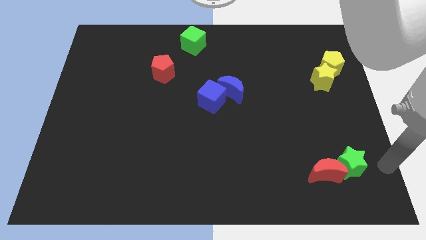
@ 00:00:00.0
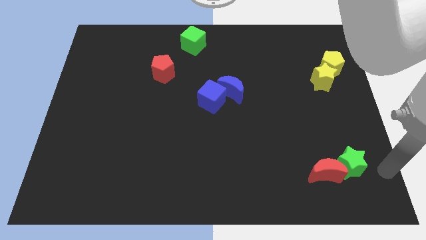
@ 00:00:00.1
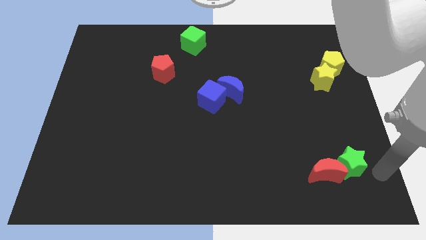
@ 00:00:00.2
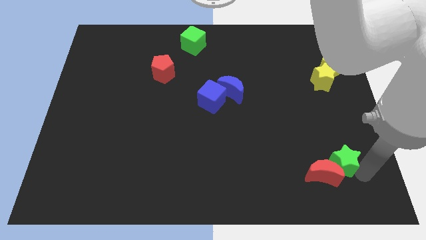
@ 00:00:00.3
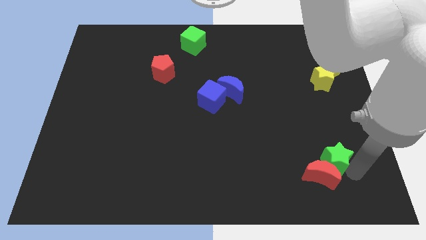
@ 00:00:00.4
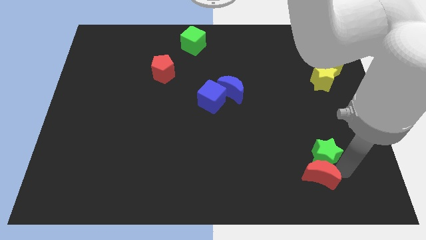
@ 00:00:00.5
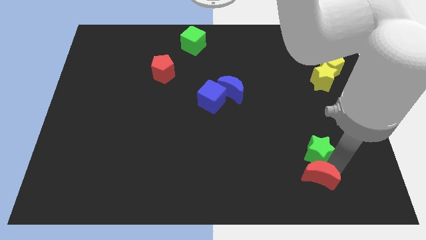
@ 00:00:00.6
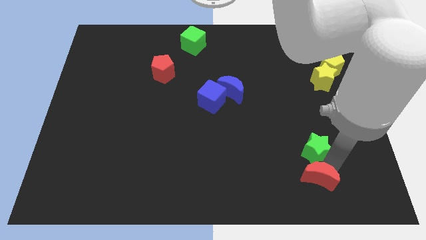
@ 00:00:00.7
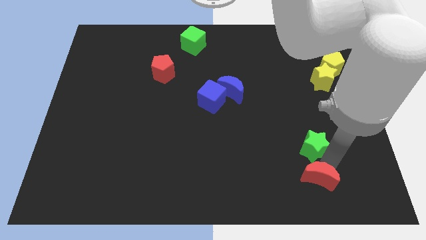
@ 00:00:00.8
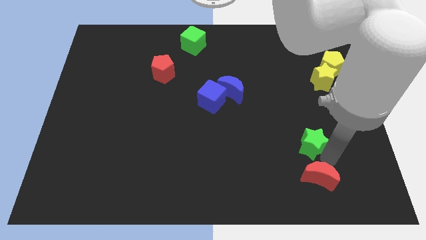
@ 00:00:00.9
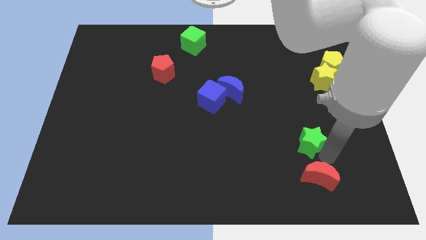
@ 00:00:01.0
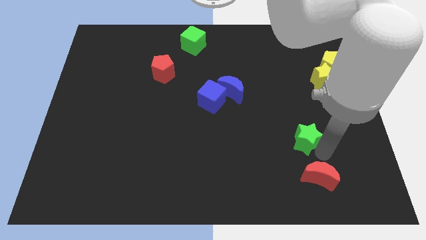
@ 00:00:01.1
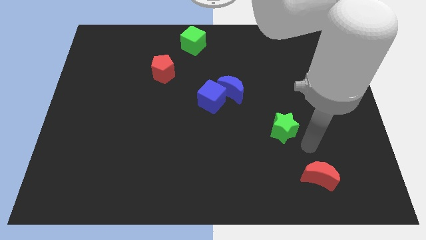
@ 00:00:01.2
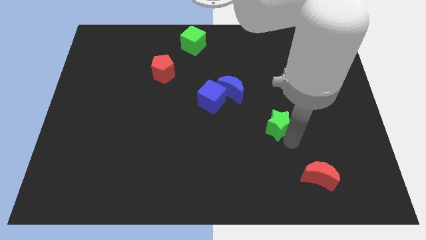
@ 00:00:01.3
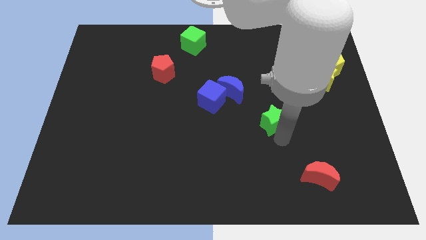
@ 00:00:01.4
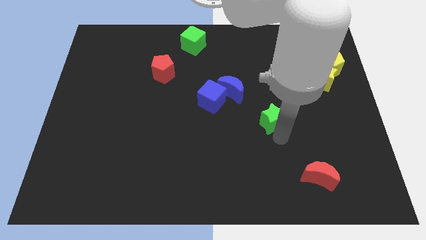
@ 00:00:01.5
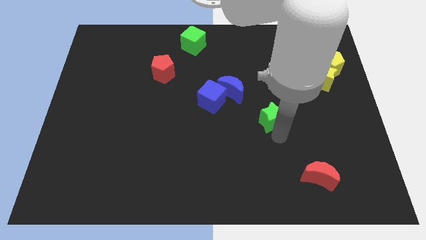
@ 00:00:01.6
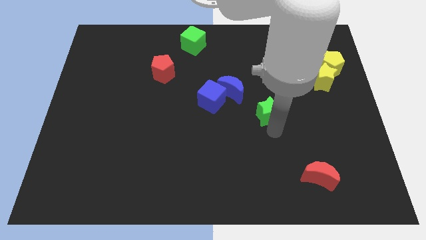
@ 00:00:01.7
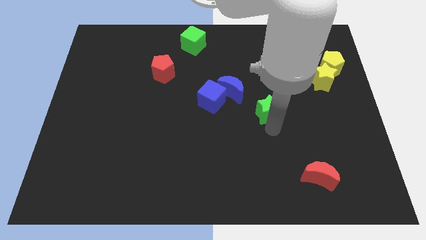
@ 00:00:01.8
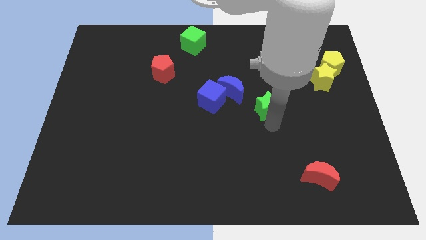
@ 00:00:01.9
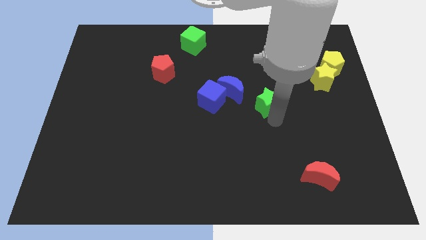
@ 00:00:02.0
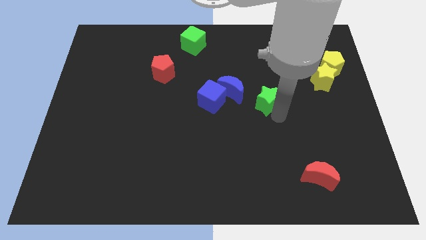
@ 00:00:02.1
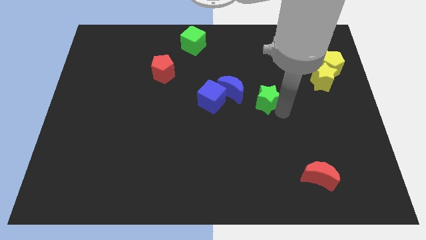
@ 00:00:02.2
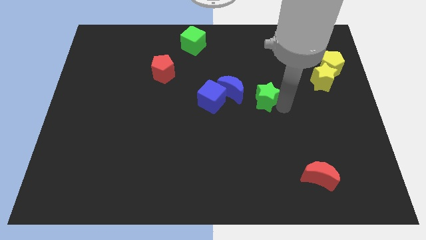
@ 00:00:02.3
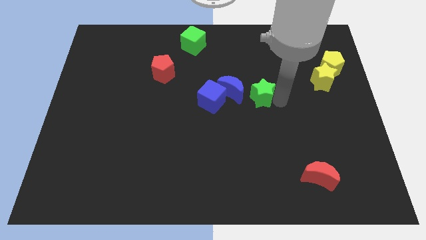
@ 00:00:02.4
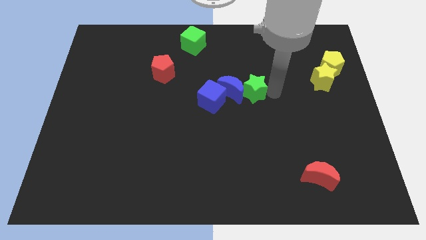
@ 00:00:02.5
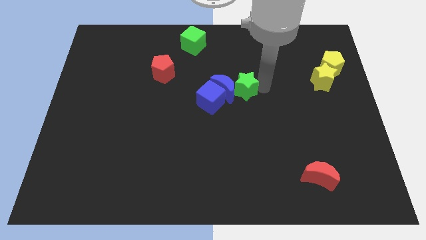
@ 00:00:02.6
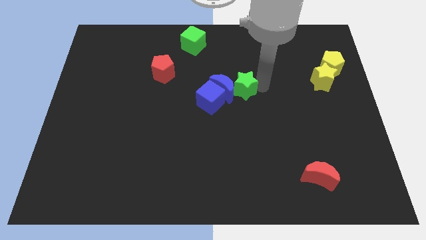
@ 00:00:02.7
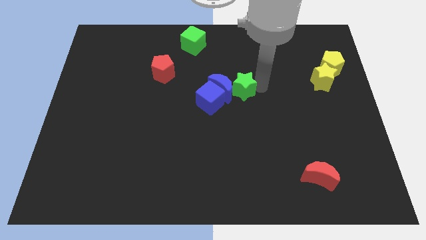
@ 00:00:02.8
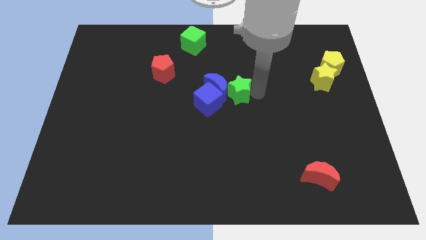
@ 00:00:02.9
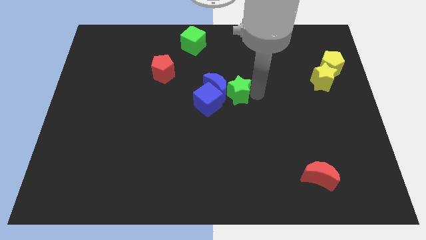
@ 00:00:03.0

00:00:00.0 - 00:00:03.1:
slide green star into blue blocks

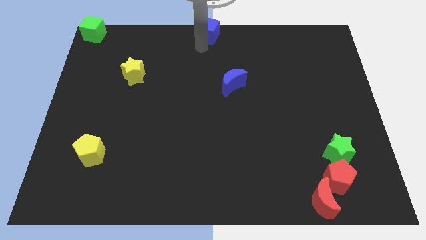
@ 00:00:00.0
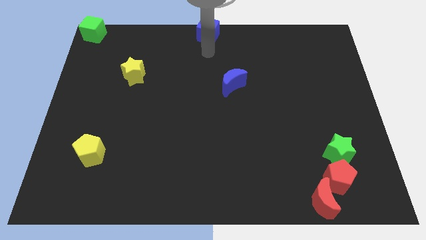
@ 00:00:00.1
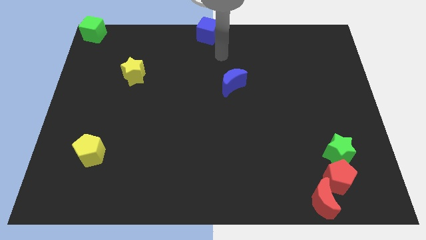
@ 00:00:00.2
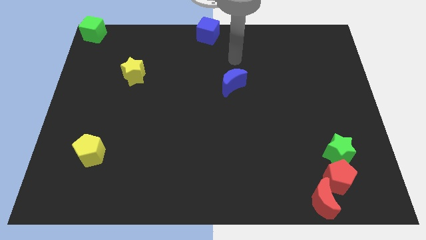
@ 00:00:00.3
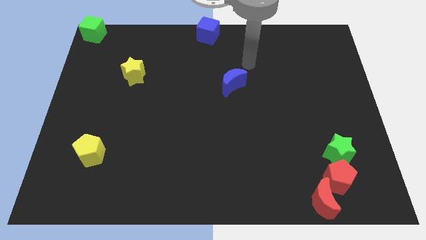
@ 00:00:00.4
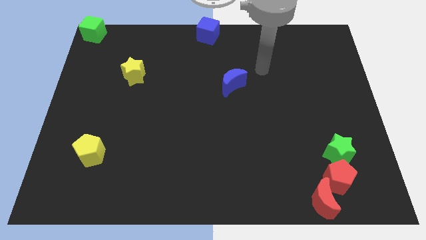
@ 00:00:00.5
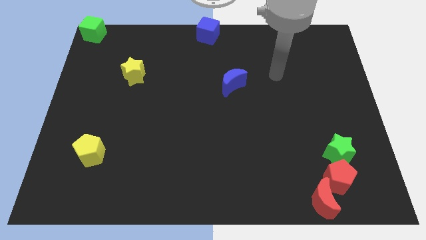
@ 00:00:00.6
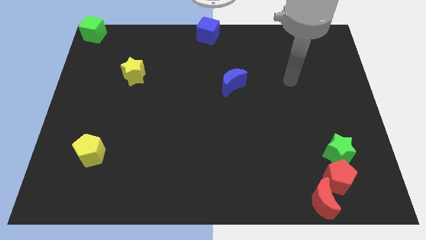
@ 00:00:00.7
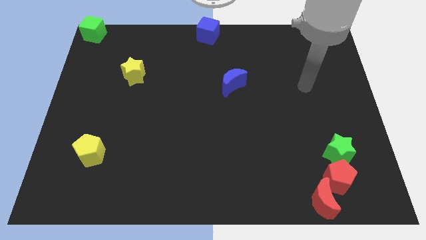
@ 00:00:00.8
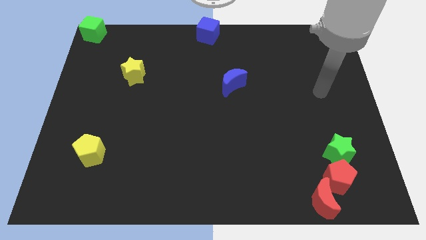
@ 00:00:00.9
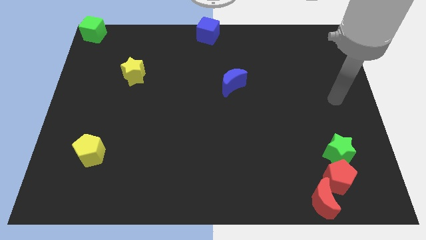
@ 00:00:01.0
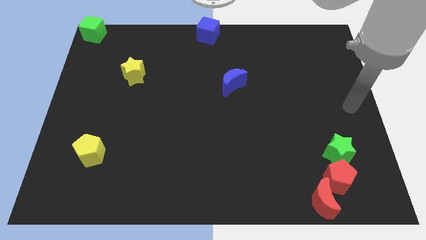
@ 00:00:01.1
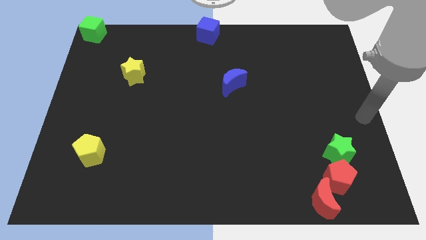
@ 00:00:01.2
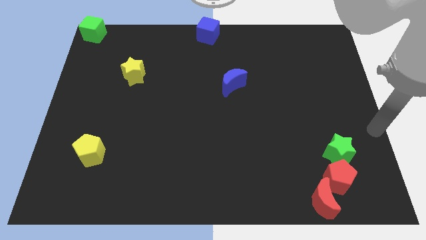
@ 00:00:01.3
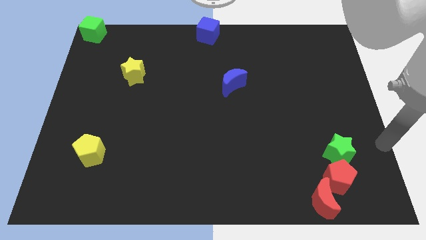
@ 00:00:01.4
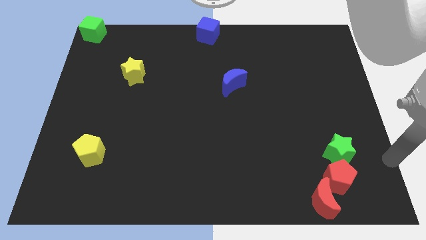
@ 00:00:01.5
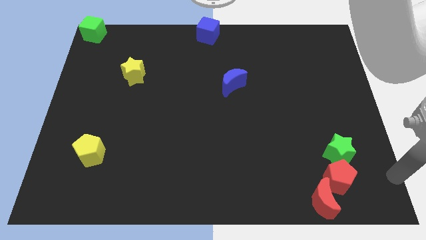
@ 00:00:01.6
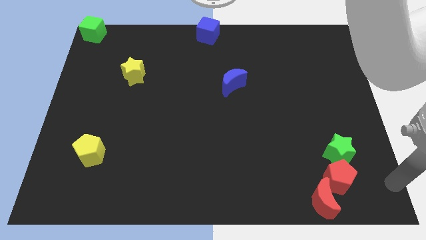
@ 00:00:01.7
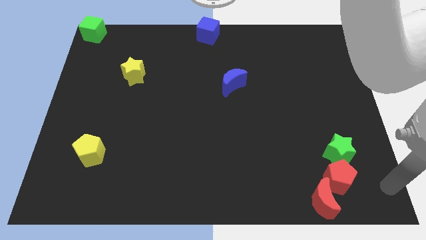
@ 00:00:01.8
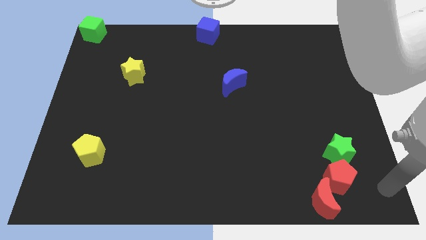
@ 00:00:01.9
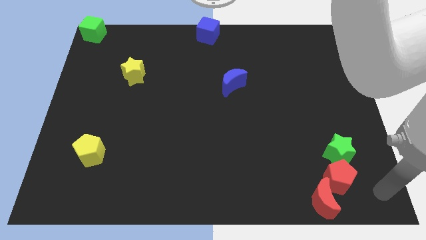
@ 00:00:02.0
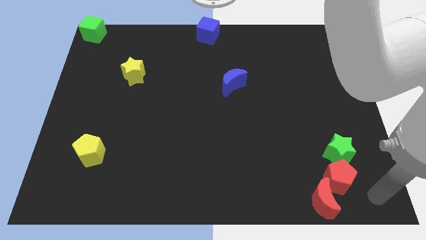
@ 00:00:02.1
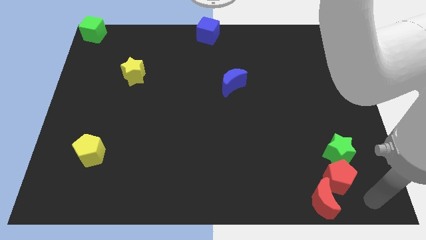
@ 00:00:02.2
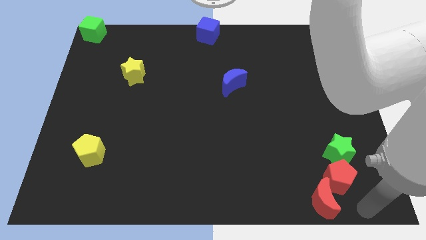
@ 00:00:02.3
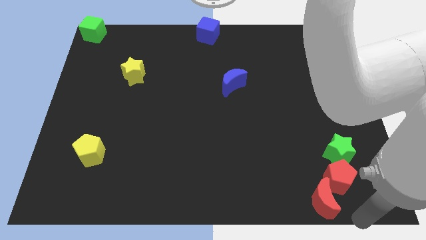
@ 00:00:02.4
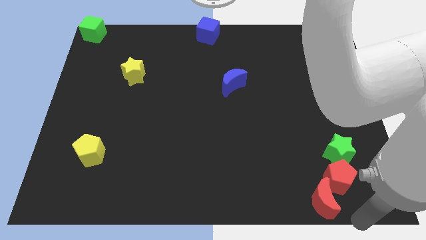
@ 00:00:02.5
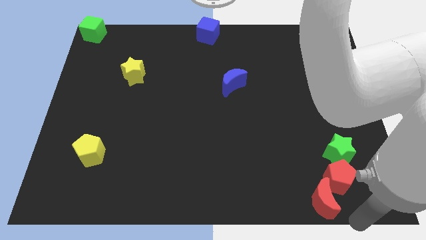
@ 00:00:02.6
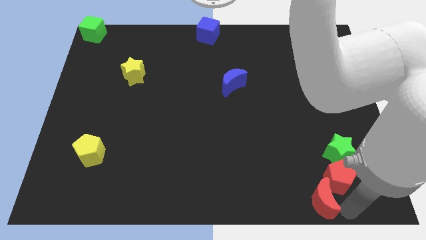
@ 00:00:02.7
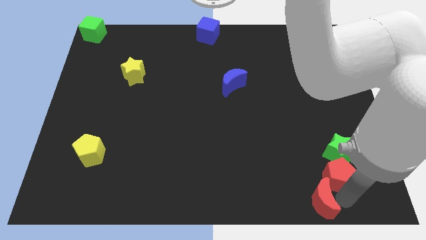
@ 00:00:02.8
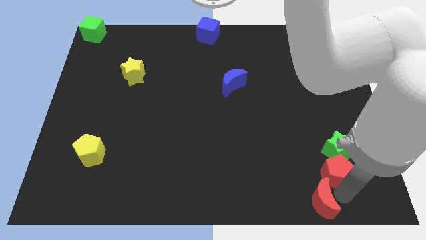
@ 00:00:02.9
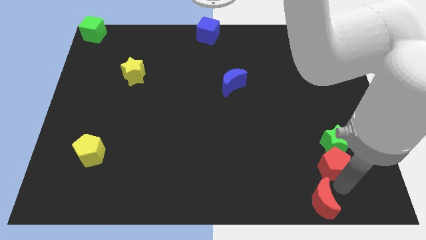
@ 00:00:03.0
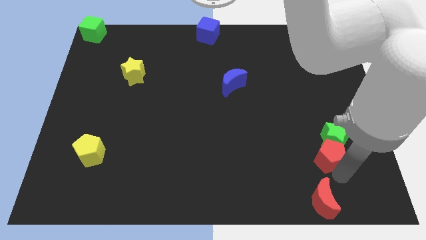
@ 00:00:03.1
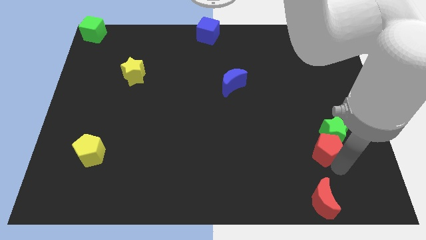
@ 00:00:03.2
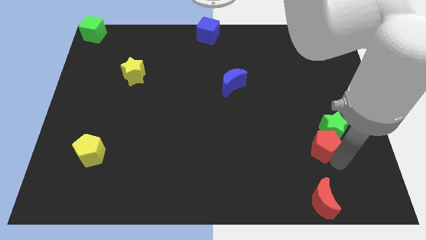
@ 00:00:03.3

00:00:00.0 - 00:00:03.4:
move your arm away from the blue cube

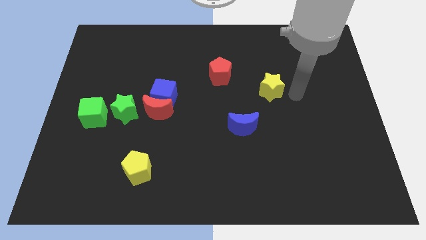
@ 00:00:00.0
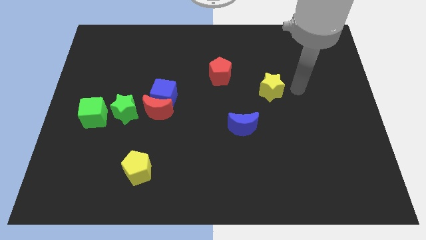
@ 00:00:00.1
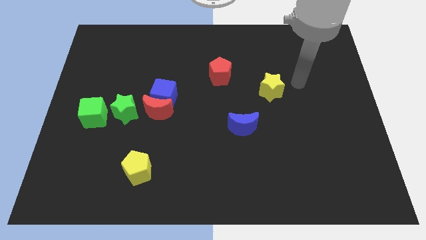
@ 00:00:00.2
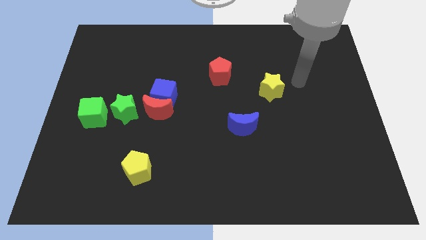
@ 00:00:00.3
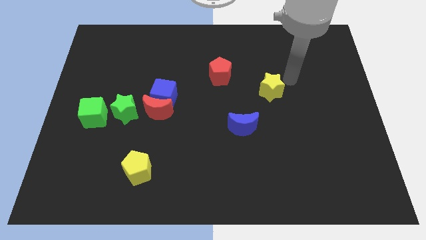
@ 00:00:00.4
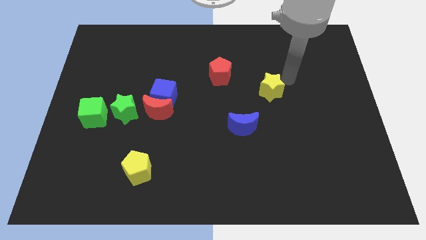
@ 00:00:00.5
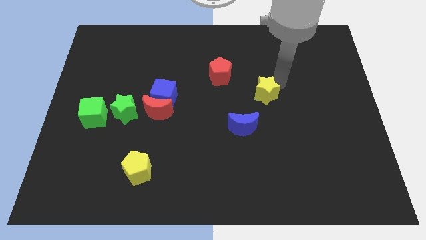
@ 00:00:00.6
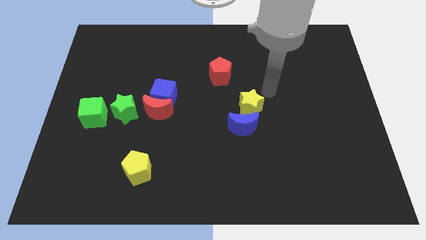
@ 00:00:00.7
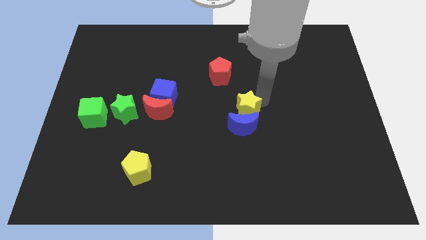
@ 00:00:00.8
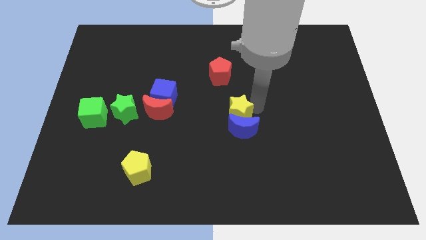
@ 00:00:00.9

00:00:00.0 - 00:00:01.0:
place the yellow star above the blue moon

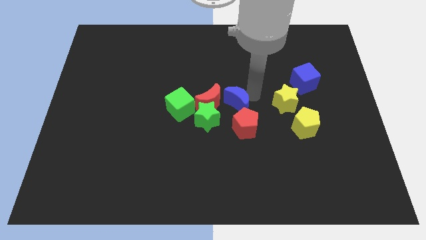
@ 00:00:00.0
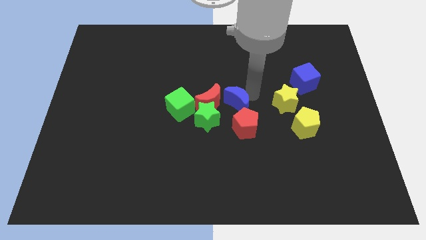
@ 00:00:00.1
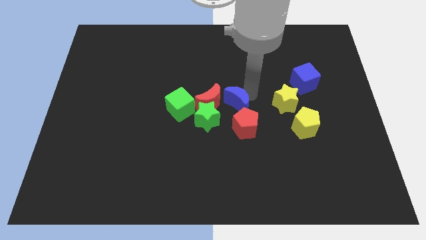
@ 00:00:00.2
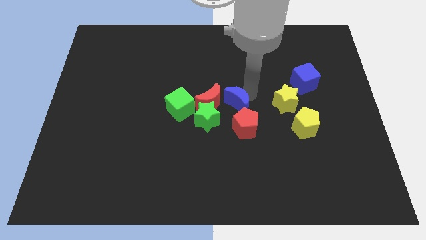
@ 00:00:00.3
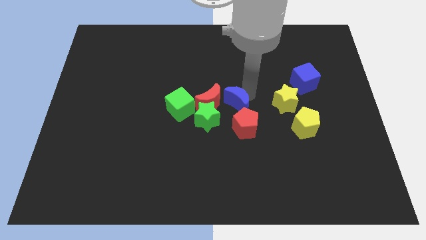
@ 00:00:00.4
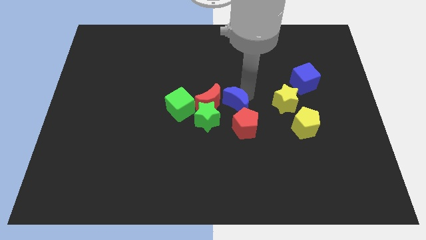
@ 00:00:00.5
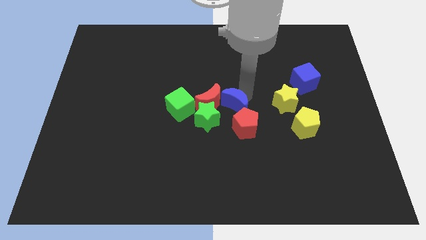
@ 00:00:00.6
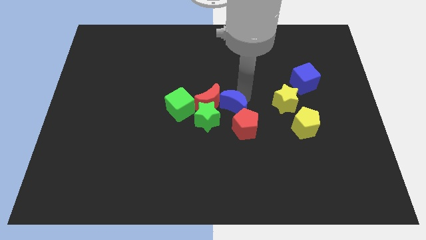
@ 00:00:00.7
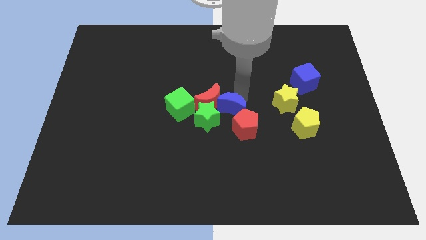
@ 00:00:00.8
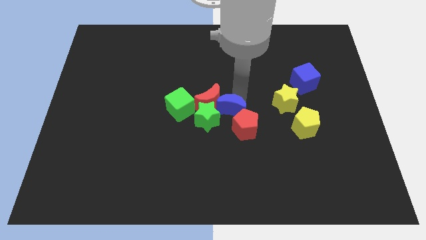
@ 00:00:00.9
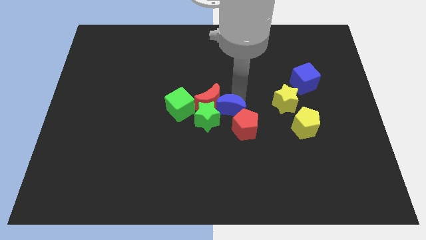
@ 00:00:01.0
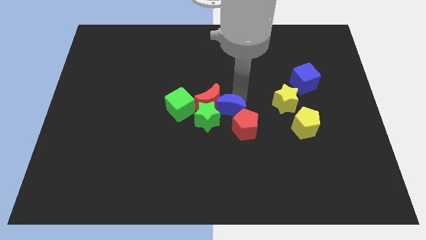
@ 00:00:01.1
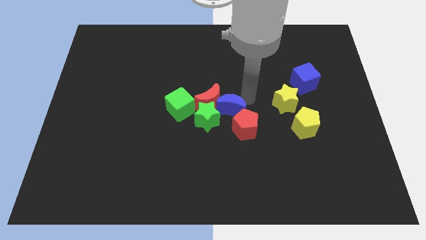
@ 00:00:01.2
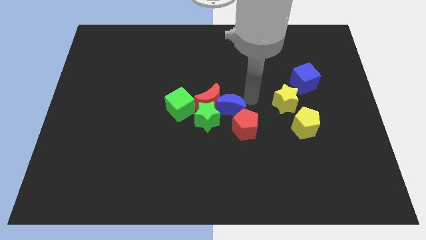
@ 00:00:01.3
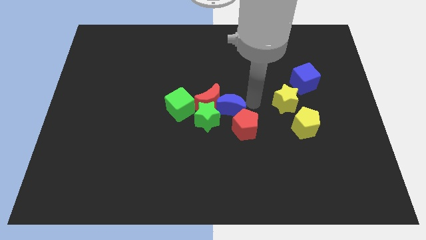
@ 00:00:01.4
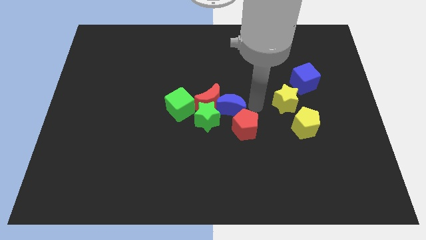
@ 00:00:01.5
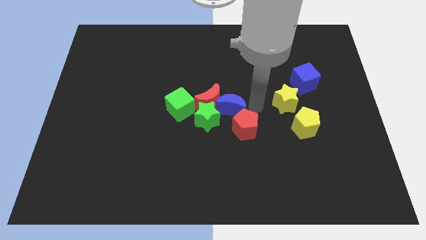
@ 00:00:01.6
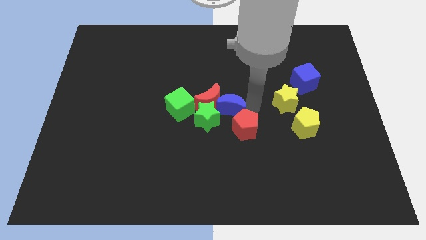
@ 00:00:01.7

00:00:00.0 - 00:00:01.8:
push the blue moon slightly downwards
